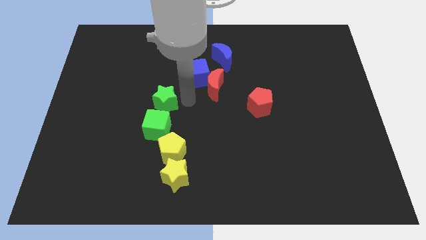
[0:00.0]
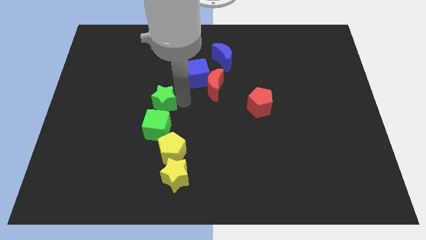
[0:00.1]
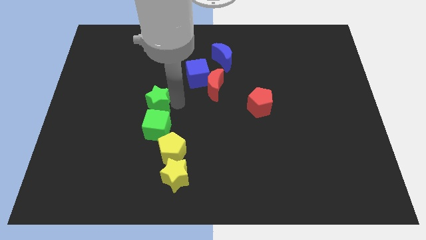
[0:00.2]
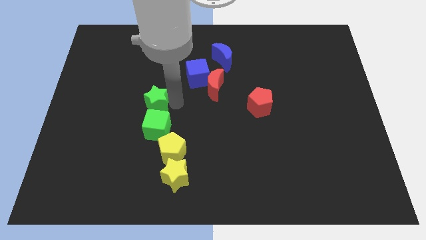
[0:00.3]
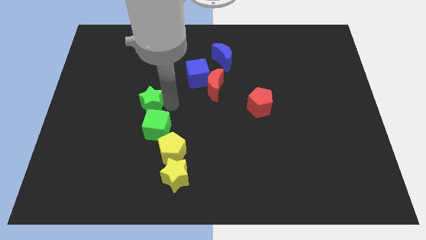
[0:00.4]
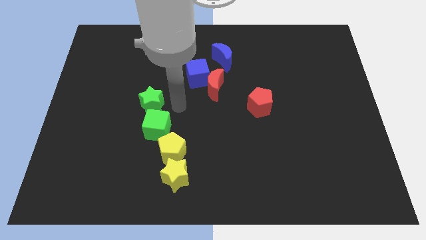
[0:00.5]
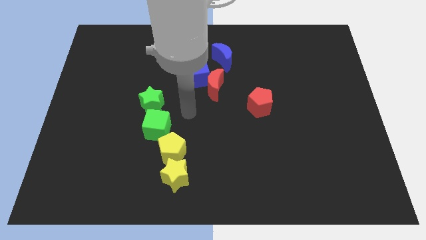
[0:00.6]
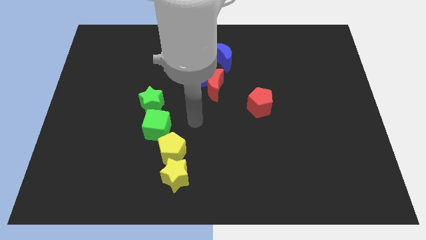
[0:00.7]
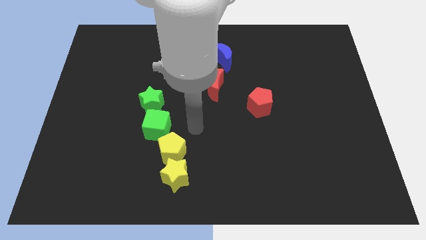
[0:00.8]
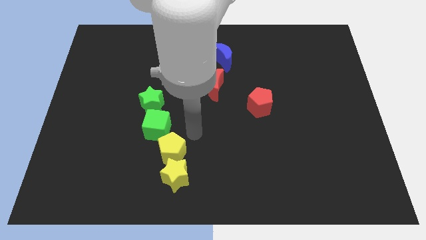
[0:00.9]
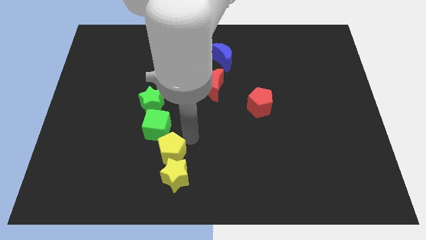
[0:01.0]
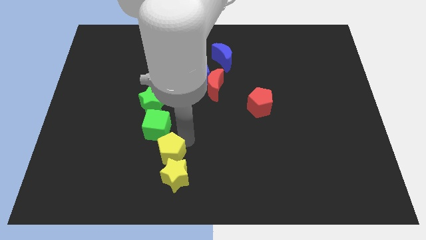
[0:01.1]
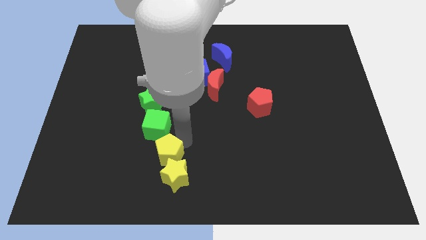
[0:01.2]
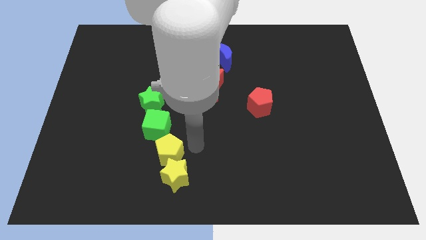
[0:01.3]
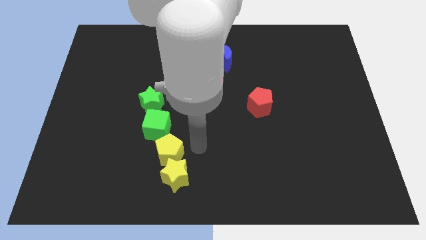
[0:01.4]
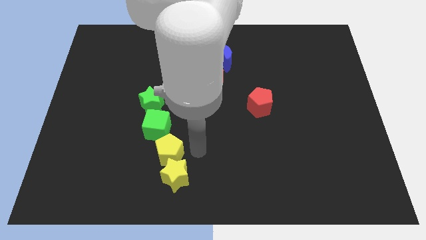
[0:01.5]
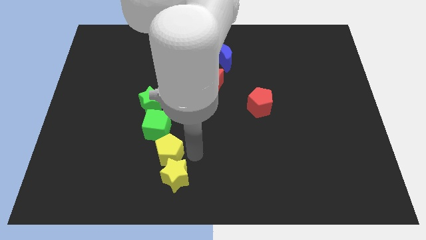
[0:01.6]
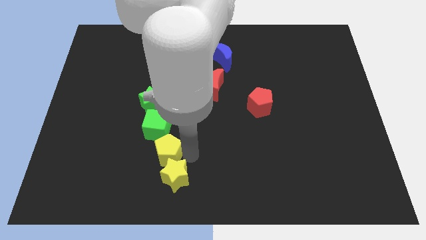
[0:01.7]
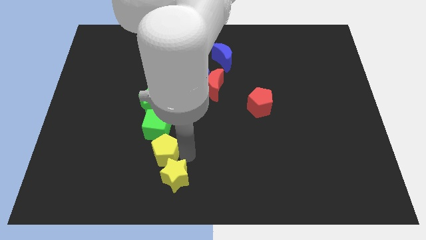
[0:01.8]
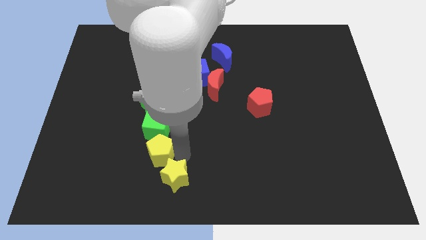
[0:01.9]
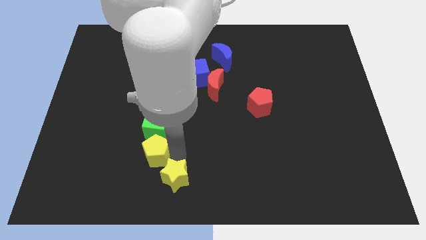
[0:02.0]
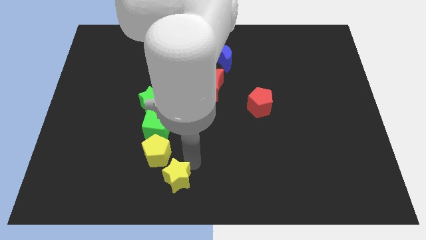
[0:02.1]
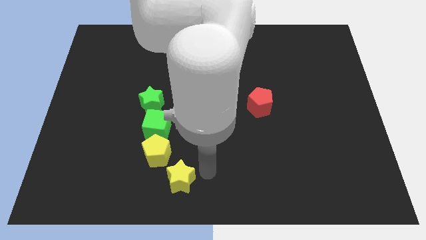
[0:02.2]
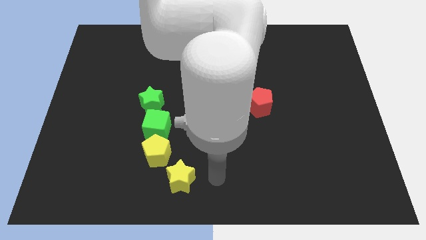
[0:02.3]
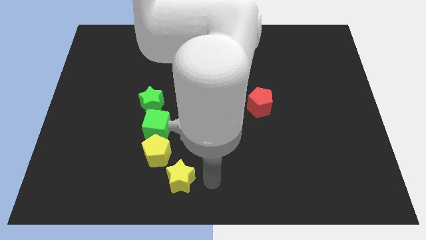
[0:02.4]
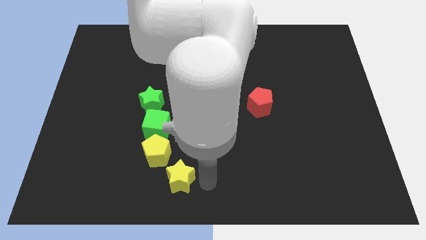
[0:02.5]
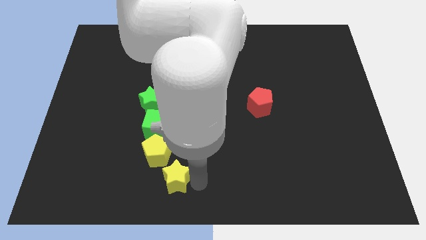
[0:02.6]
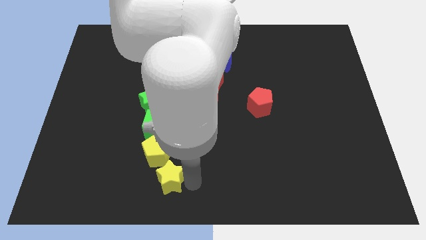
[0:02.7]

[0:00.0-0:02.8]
move the yellow pentagon down to the green cube

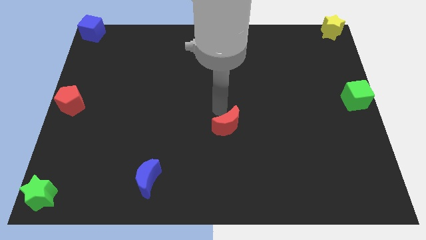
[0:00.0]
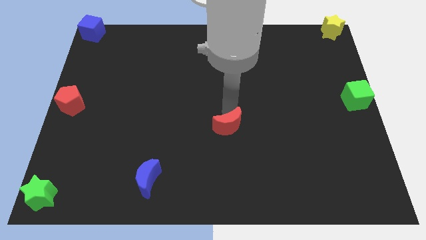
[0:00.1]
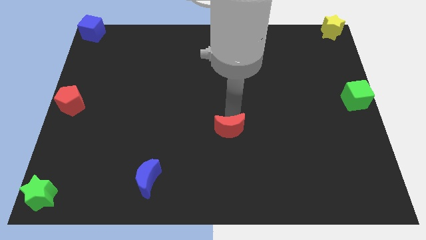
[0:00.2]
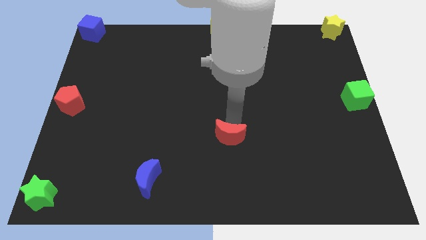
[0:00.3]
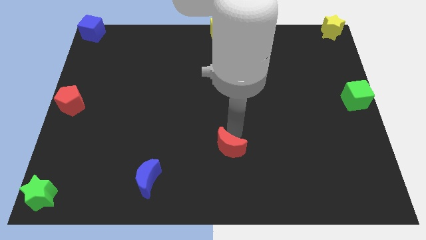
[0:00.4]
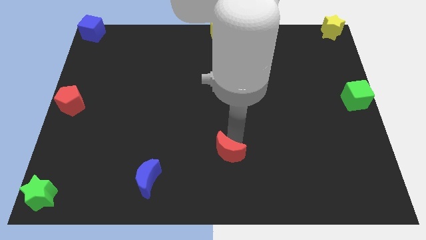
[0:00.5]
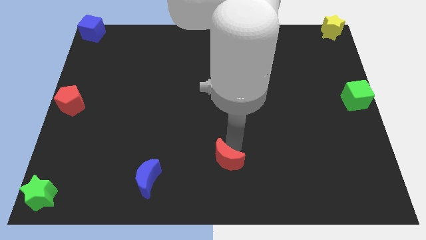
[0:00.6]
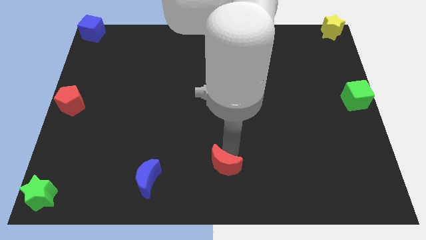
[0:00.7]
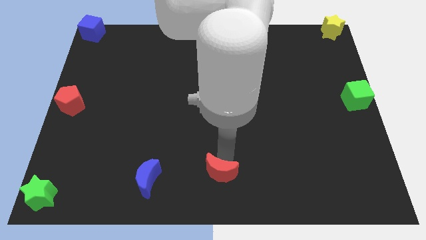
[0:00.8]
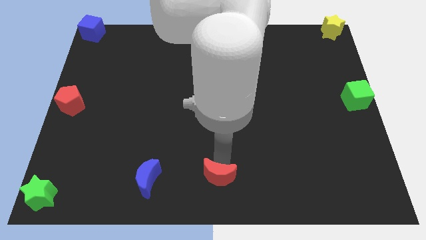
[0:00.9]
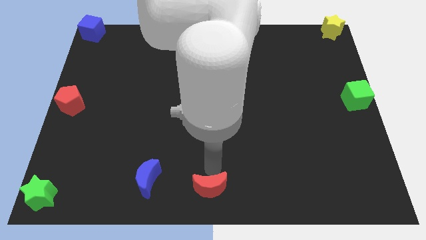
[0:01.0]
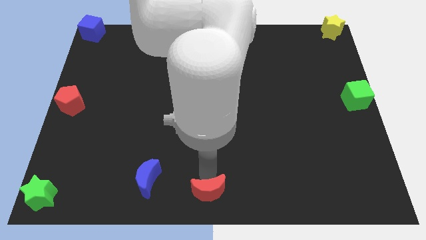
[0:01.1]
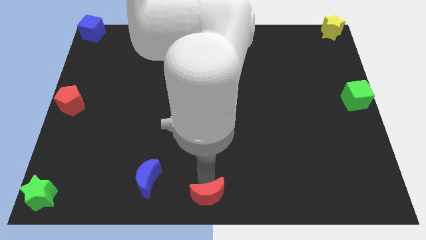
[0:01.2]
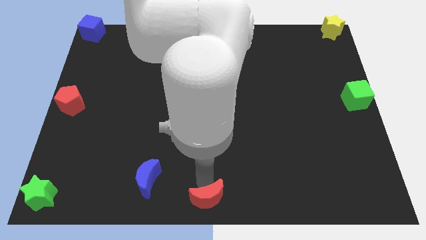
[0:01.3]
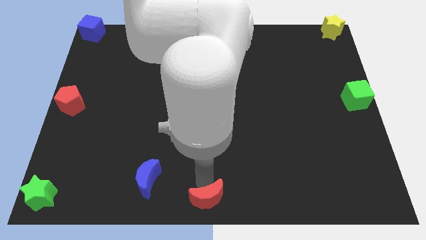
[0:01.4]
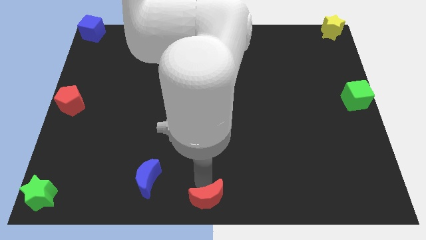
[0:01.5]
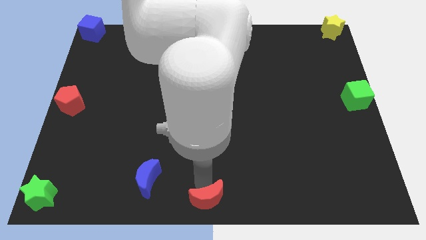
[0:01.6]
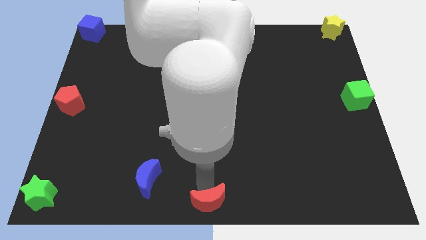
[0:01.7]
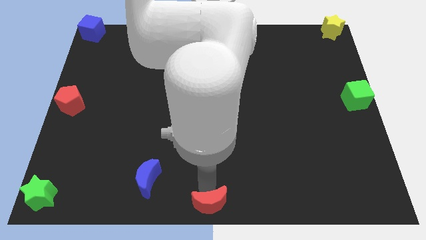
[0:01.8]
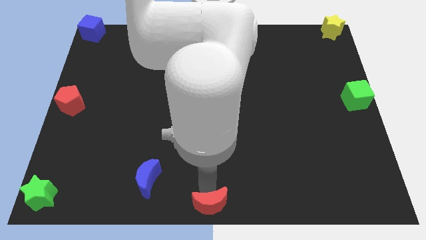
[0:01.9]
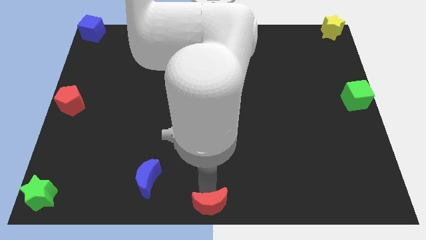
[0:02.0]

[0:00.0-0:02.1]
drag the red moon at the bottom center of the board

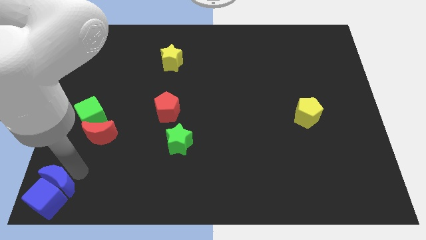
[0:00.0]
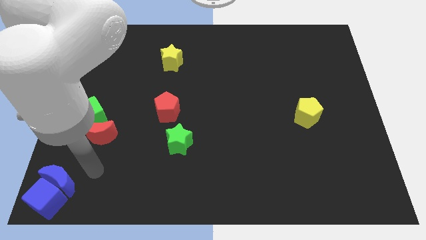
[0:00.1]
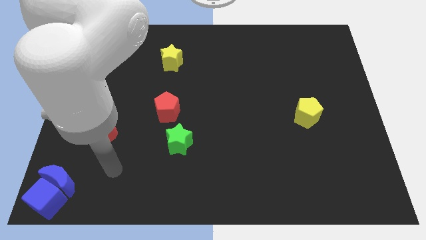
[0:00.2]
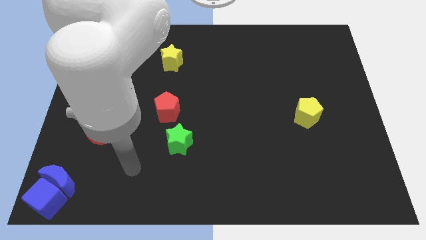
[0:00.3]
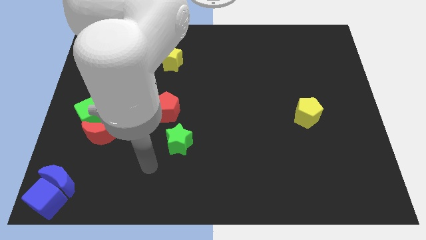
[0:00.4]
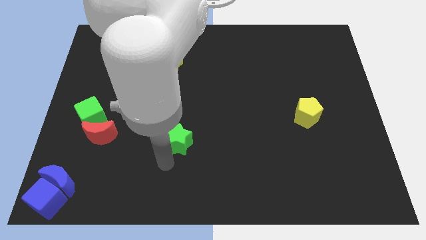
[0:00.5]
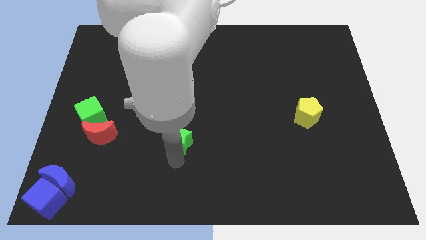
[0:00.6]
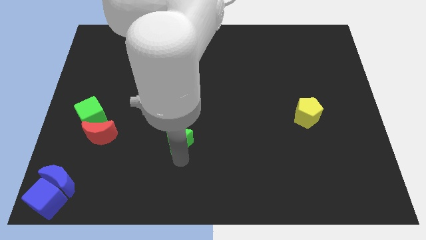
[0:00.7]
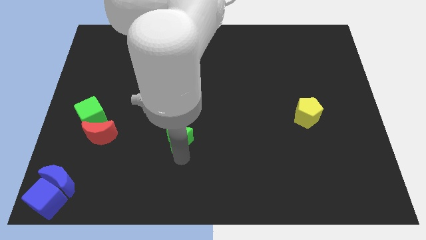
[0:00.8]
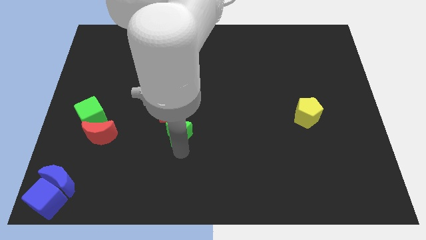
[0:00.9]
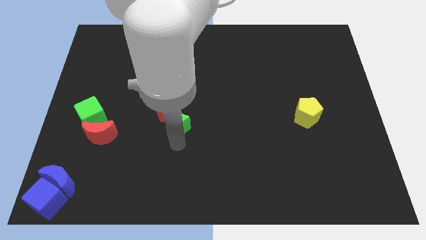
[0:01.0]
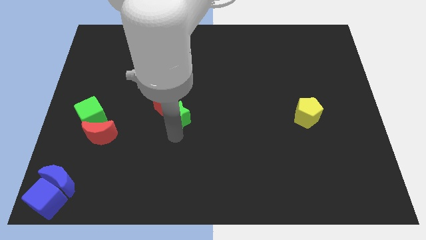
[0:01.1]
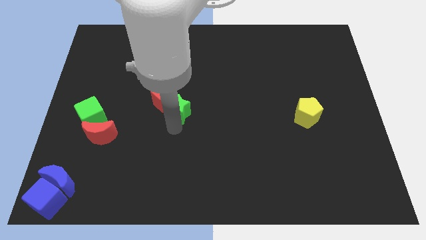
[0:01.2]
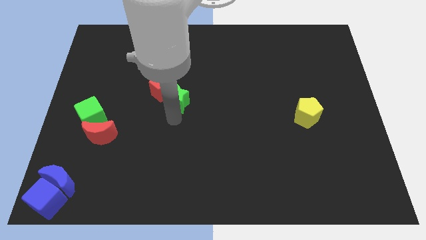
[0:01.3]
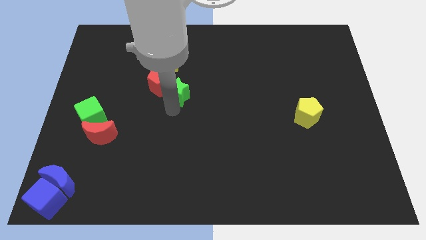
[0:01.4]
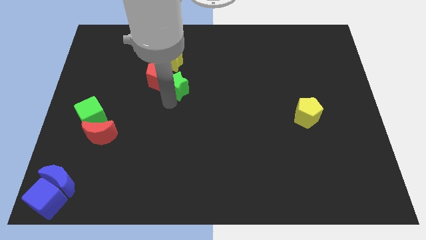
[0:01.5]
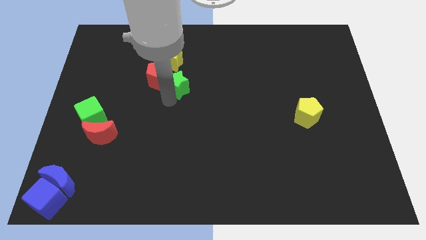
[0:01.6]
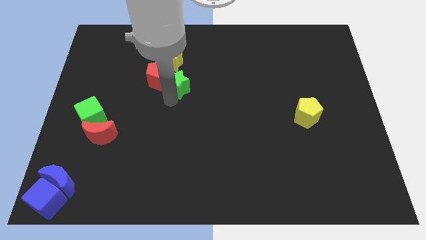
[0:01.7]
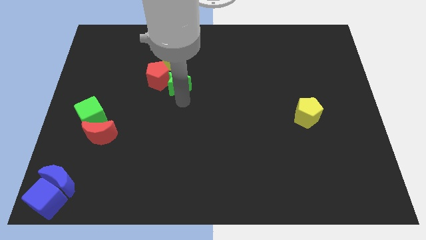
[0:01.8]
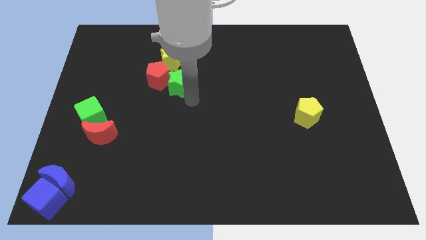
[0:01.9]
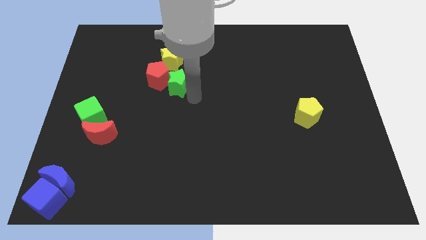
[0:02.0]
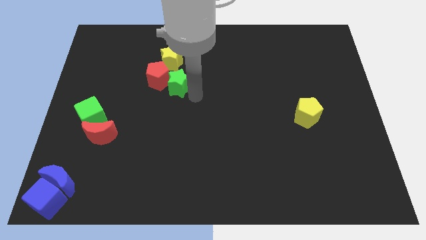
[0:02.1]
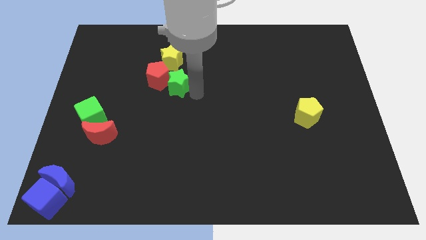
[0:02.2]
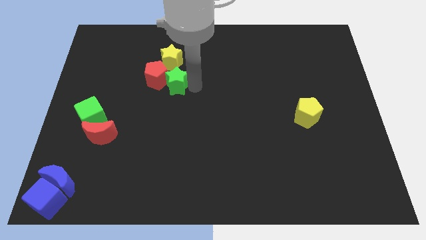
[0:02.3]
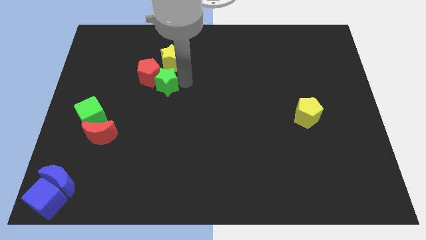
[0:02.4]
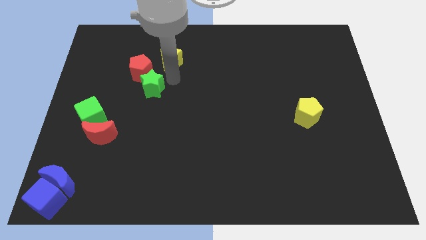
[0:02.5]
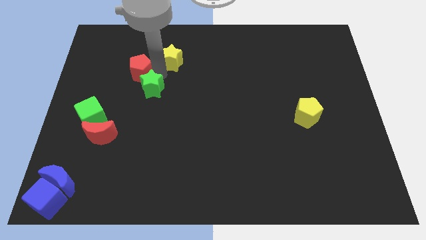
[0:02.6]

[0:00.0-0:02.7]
push the green star to the bottom right to the red pentagon

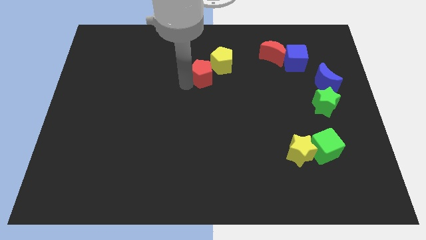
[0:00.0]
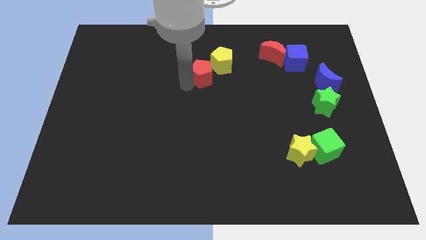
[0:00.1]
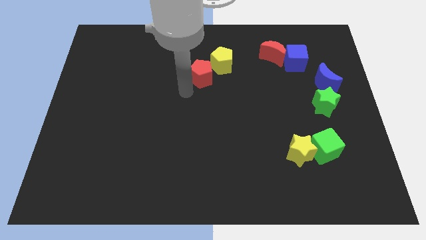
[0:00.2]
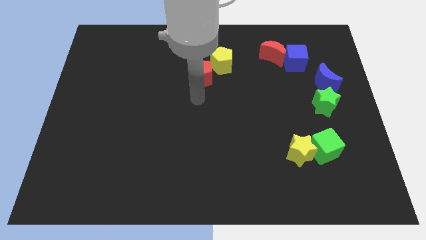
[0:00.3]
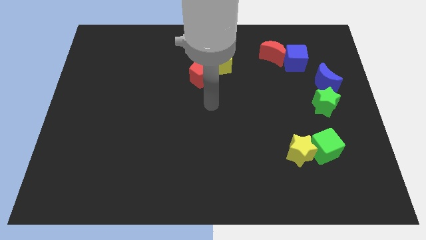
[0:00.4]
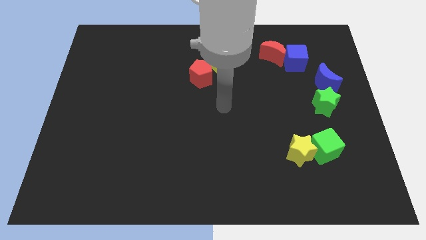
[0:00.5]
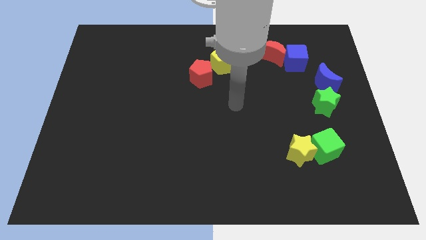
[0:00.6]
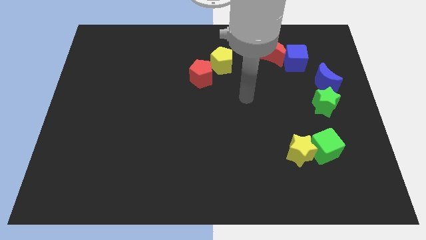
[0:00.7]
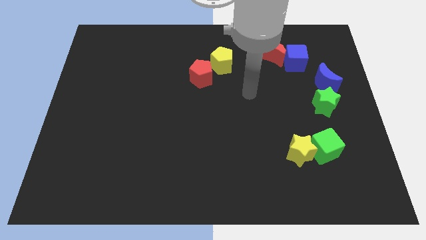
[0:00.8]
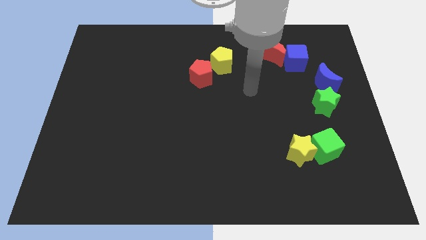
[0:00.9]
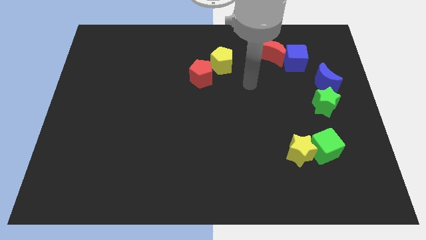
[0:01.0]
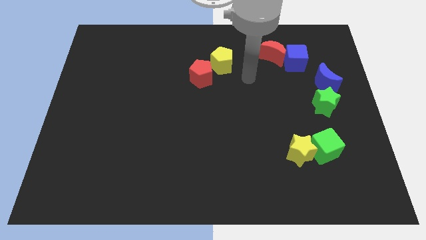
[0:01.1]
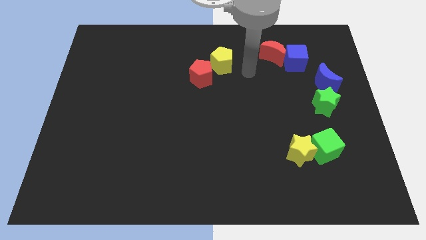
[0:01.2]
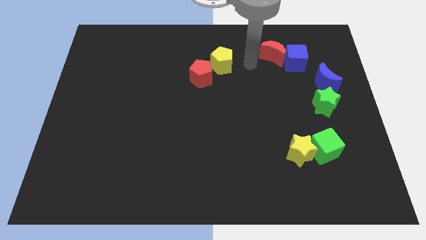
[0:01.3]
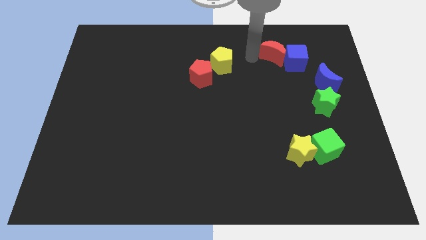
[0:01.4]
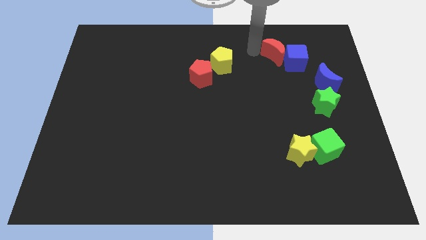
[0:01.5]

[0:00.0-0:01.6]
point your arm to the left side of red moon
